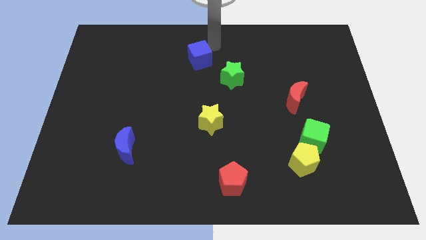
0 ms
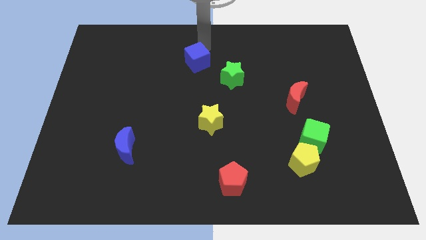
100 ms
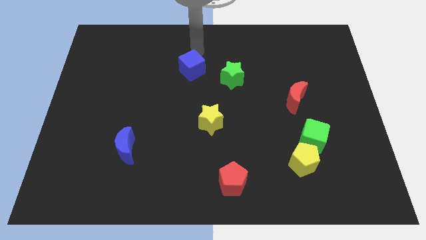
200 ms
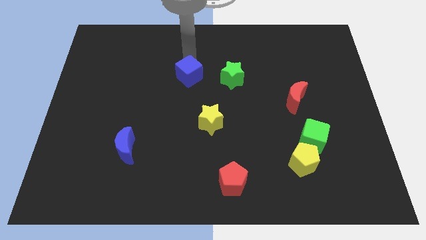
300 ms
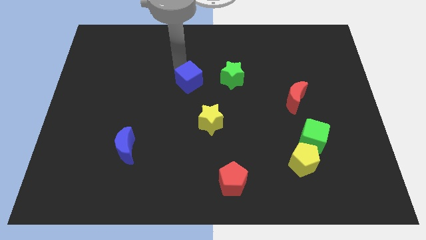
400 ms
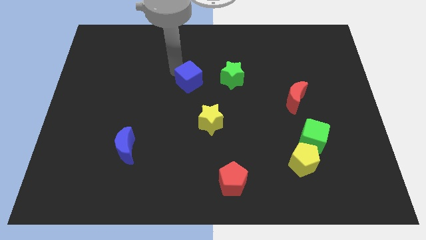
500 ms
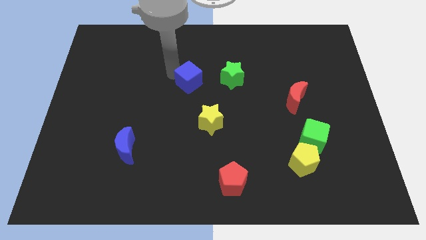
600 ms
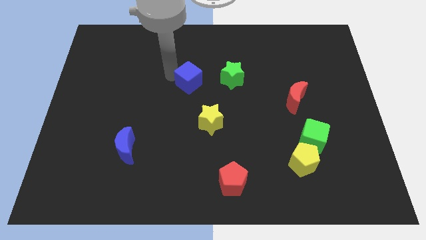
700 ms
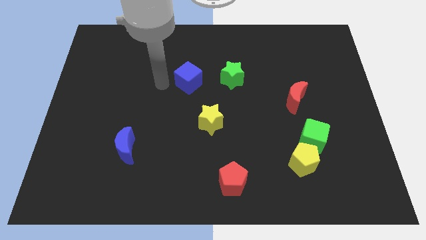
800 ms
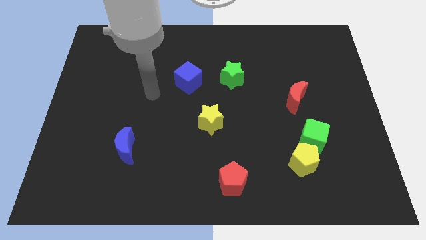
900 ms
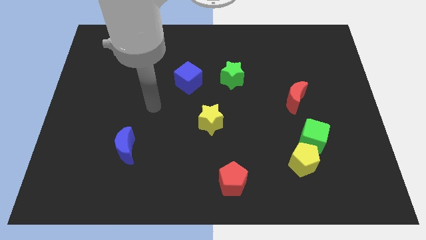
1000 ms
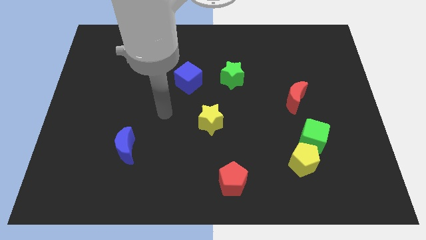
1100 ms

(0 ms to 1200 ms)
slightly push the blue cube towards down

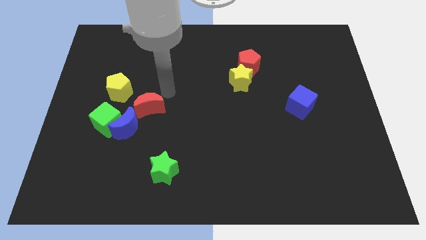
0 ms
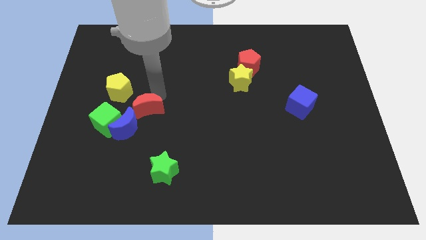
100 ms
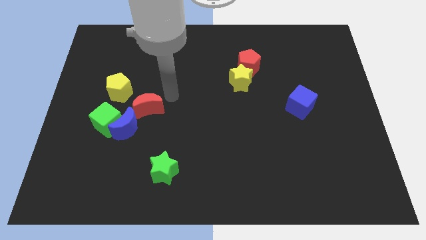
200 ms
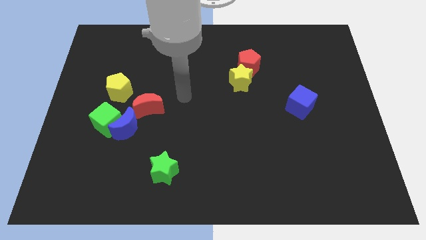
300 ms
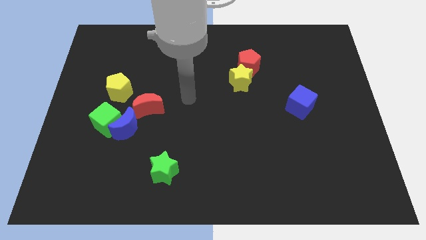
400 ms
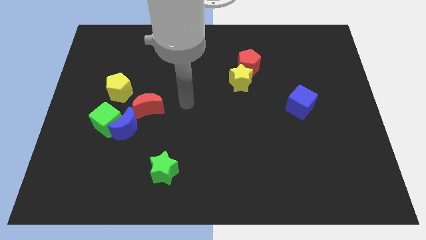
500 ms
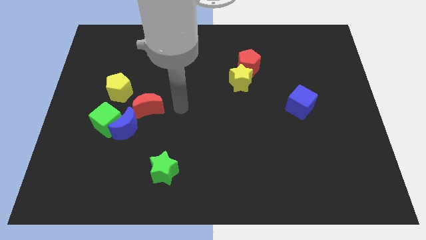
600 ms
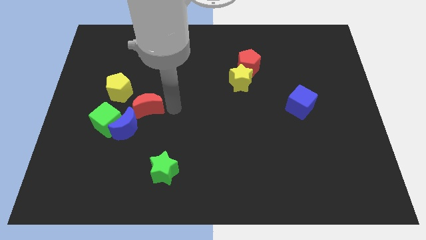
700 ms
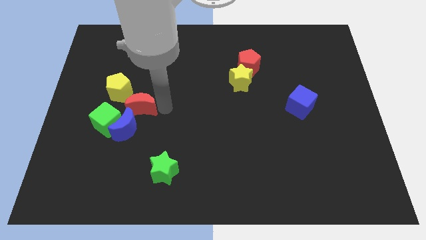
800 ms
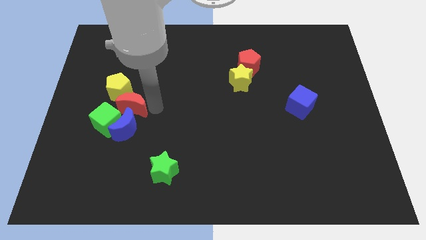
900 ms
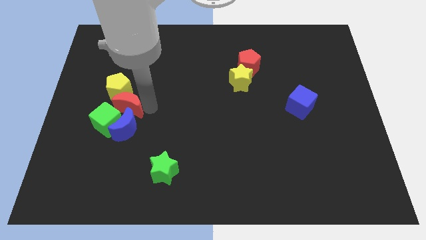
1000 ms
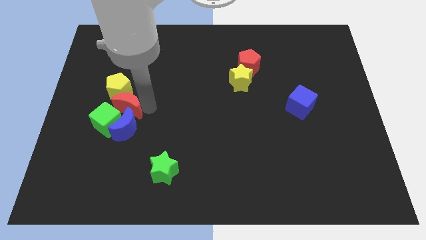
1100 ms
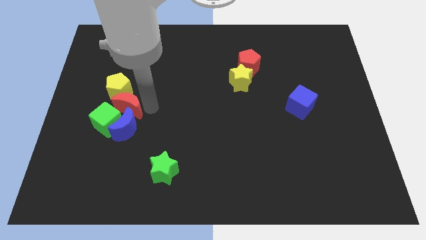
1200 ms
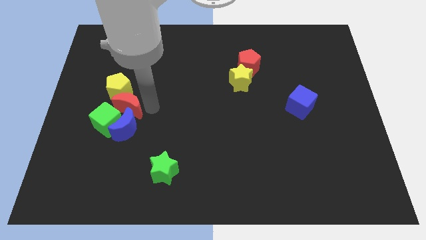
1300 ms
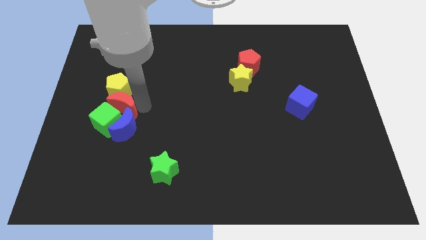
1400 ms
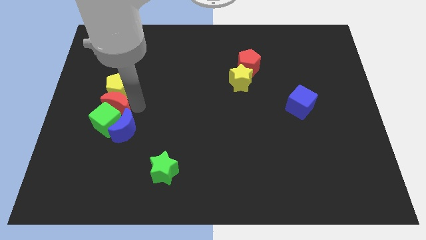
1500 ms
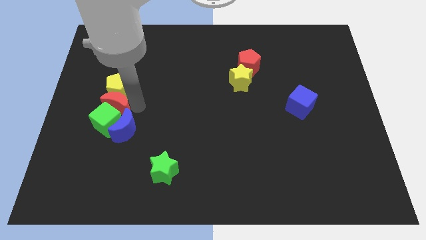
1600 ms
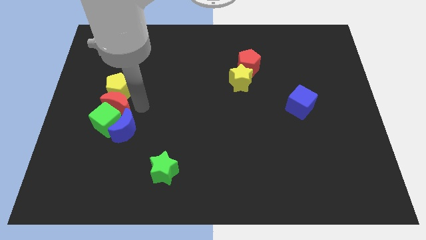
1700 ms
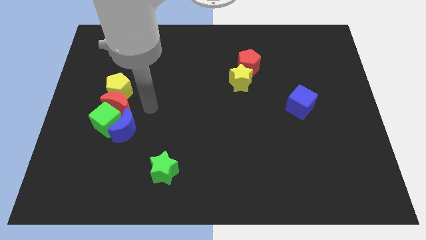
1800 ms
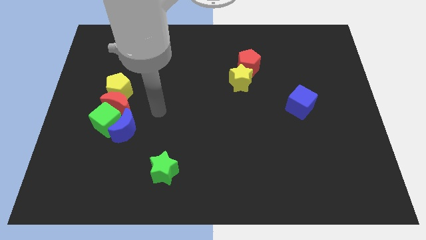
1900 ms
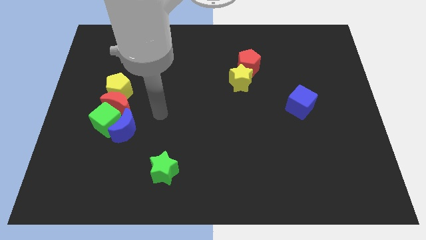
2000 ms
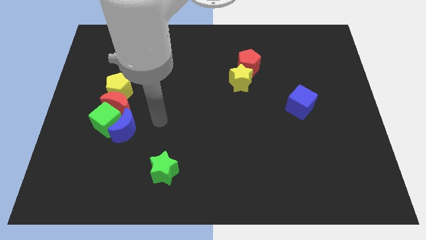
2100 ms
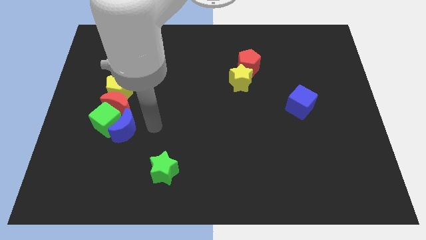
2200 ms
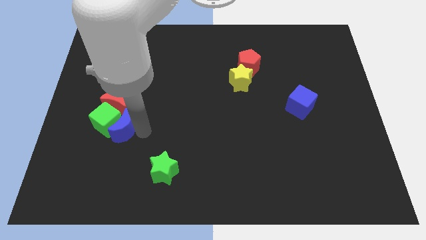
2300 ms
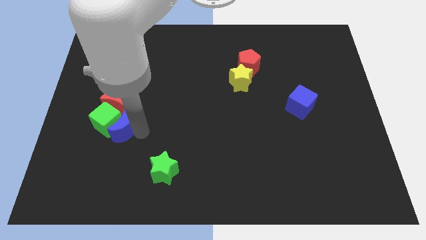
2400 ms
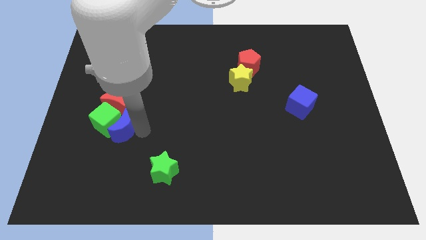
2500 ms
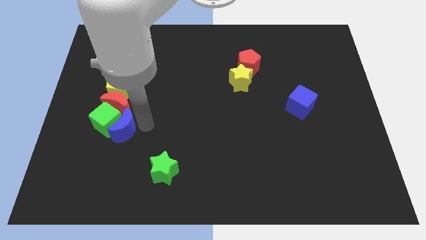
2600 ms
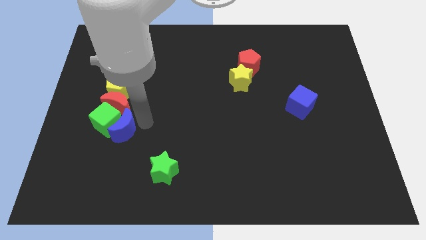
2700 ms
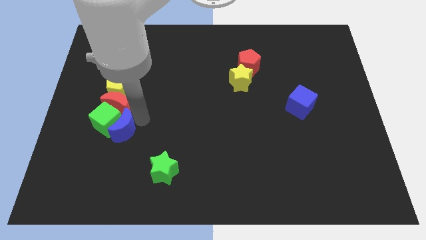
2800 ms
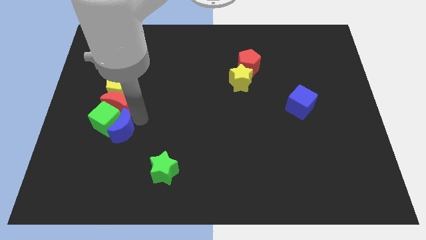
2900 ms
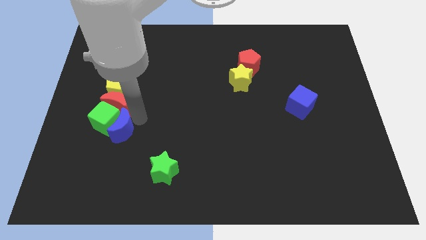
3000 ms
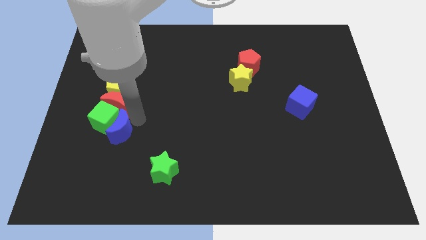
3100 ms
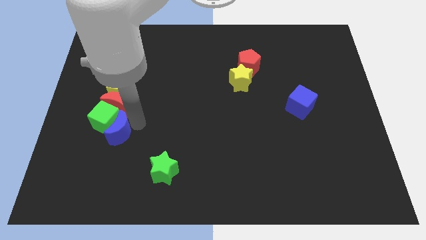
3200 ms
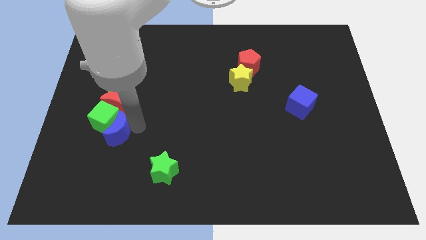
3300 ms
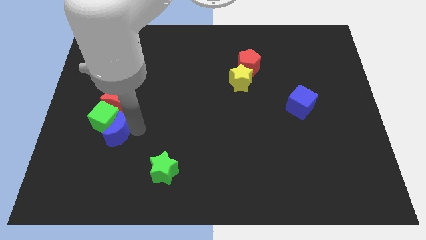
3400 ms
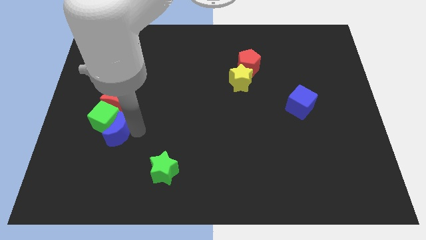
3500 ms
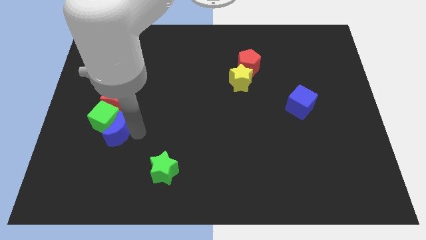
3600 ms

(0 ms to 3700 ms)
push red moon to the top of green cube

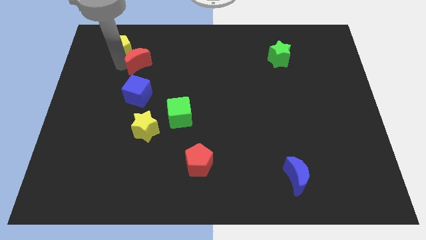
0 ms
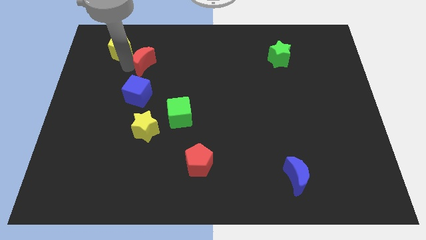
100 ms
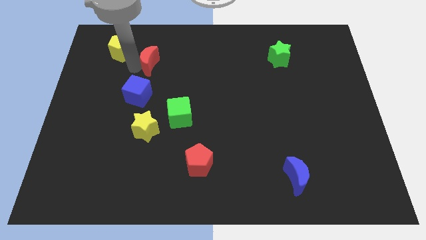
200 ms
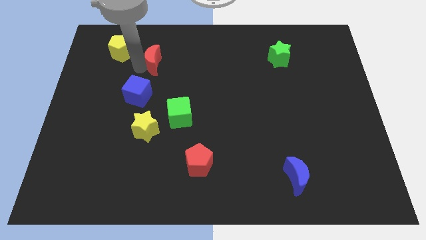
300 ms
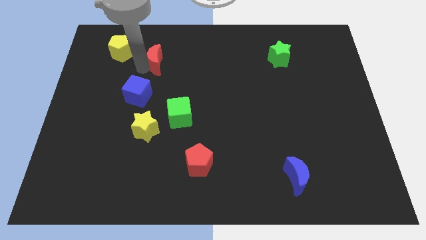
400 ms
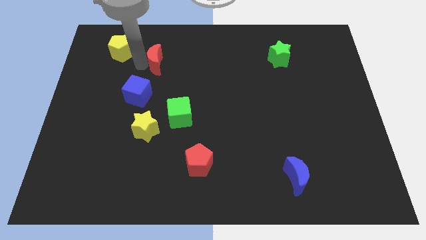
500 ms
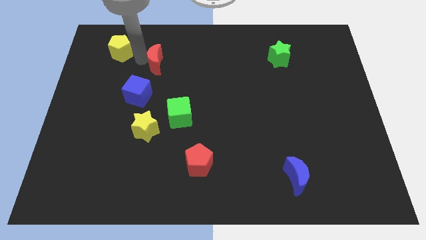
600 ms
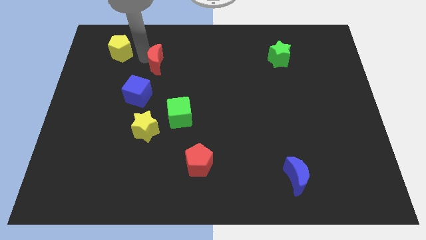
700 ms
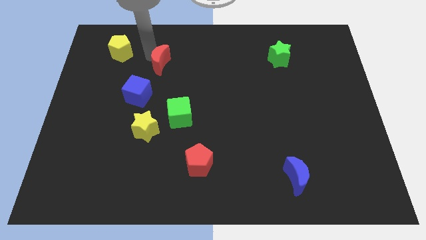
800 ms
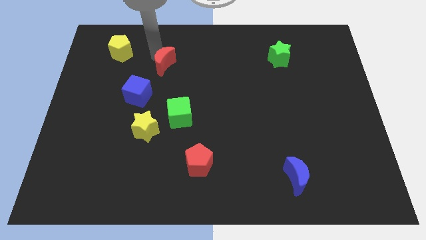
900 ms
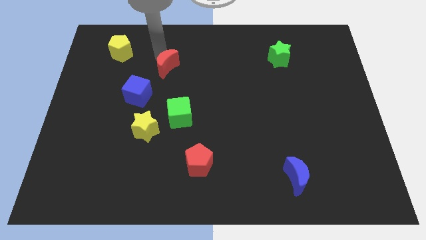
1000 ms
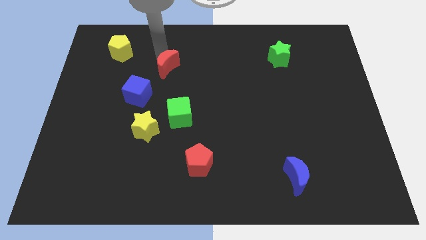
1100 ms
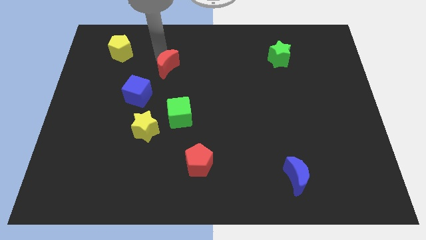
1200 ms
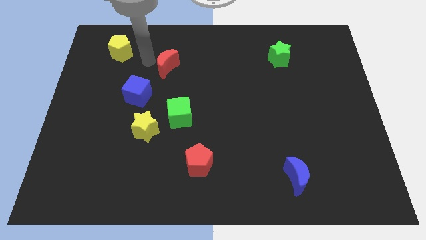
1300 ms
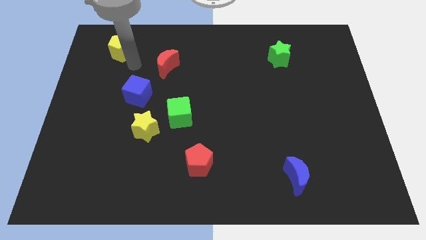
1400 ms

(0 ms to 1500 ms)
place red moon above green cube

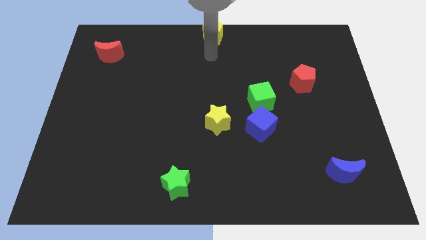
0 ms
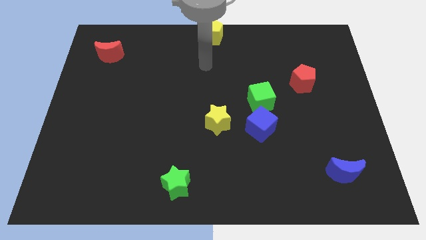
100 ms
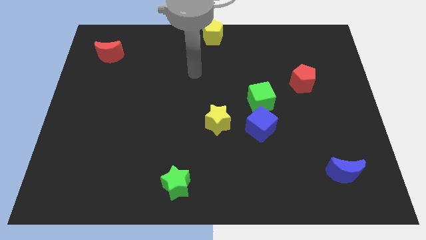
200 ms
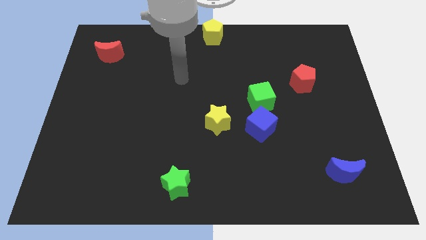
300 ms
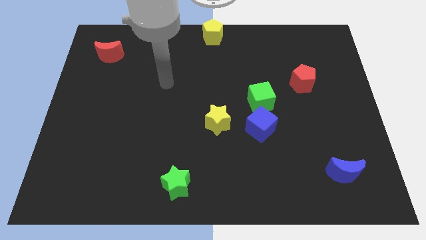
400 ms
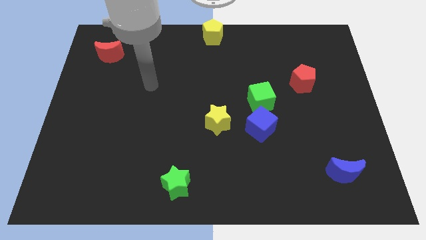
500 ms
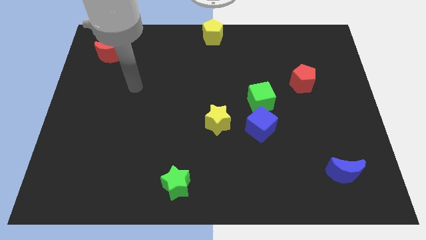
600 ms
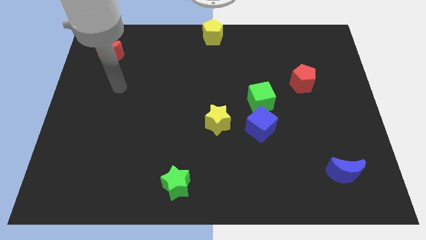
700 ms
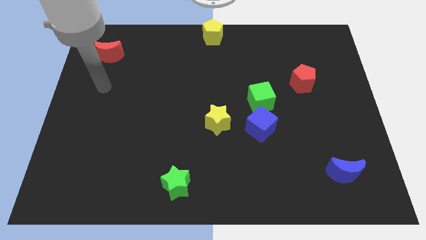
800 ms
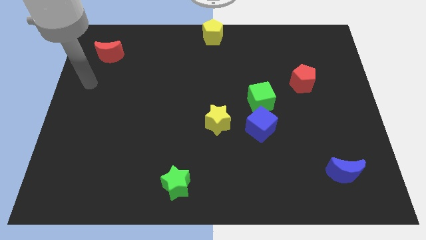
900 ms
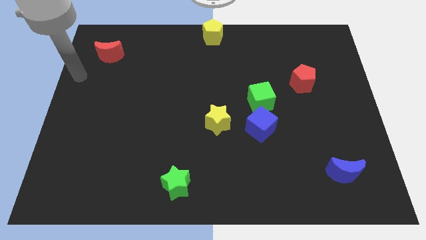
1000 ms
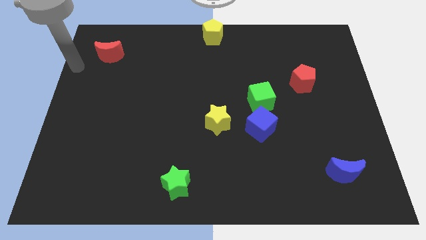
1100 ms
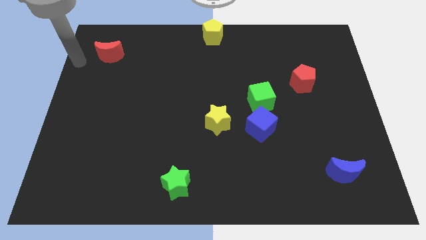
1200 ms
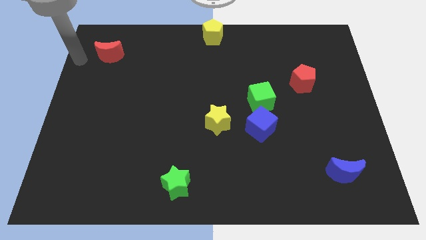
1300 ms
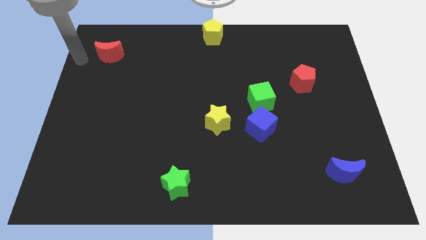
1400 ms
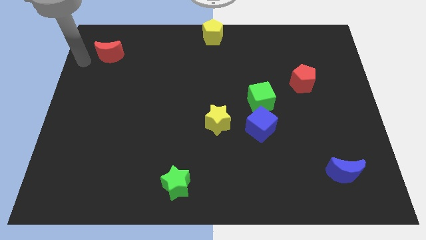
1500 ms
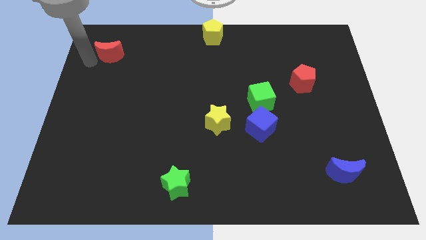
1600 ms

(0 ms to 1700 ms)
move your arm towards the red crescent

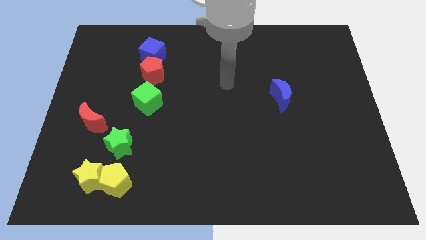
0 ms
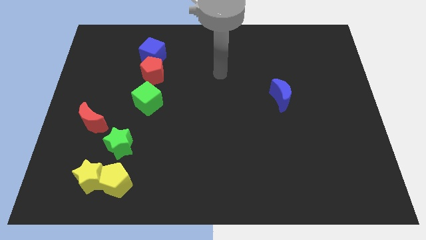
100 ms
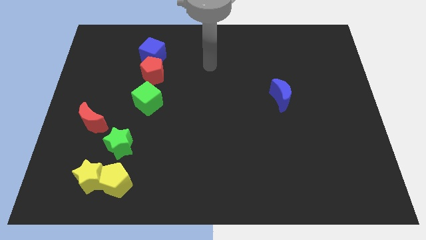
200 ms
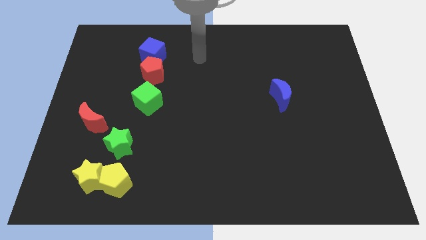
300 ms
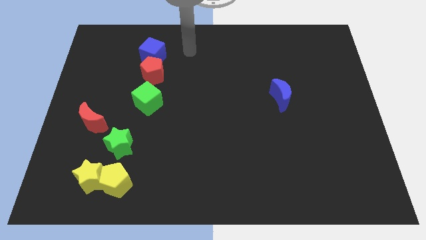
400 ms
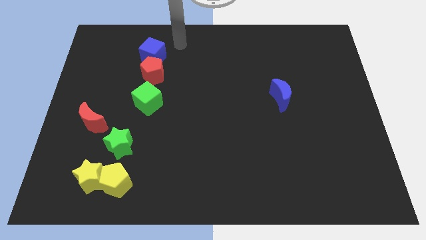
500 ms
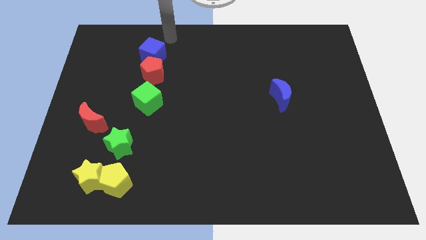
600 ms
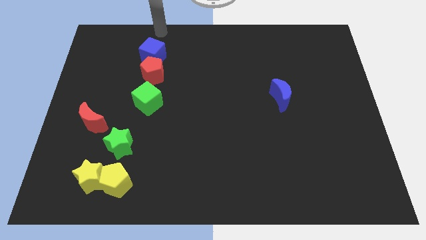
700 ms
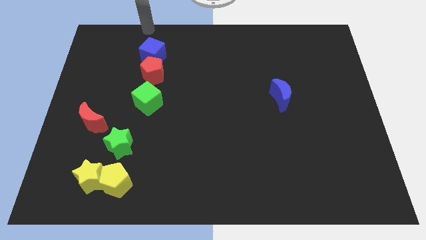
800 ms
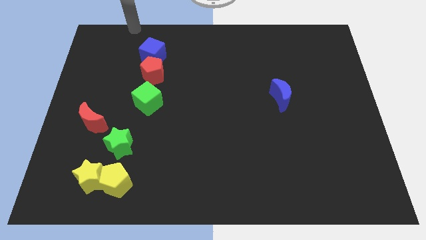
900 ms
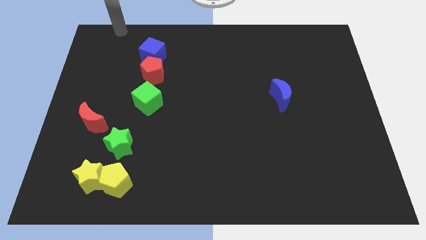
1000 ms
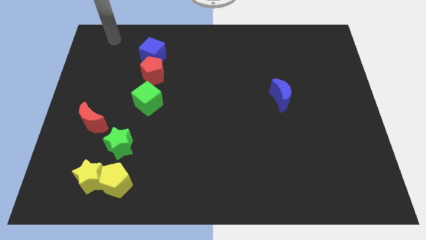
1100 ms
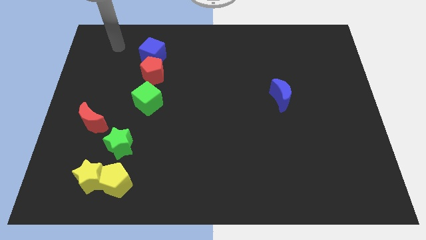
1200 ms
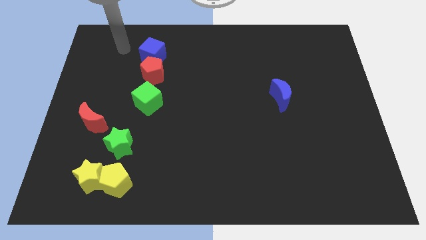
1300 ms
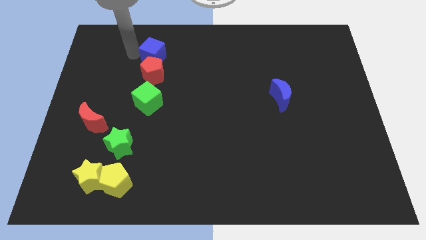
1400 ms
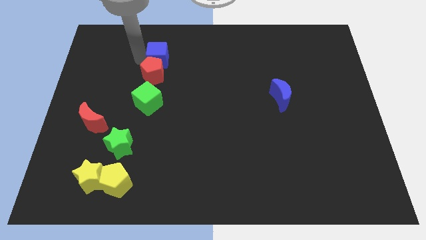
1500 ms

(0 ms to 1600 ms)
move the blue cube slightly to the right
